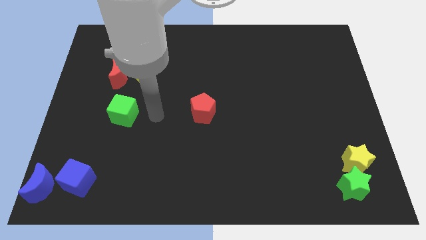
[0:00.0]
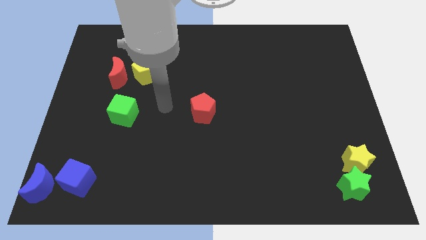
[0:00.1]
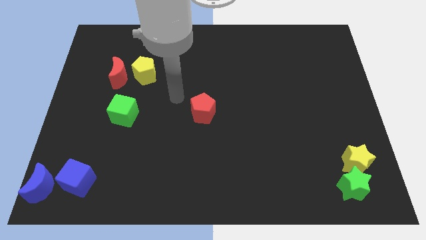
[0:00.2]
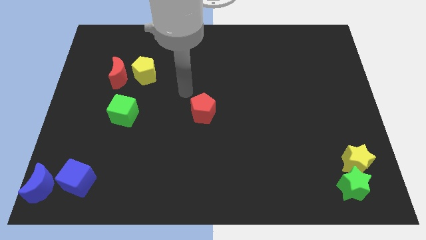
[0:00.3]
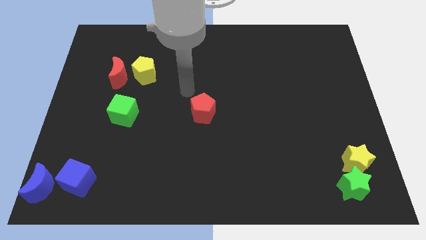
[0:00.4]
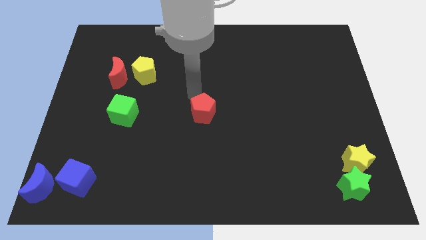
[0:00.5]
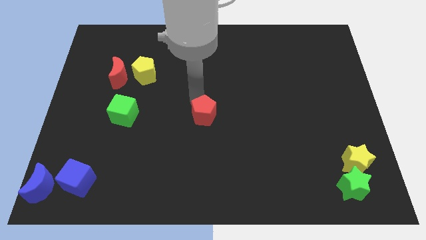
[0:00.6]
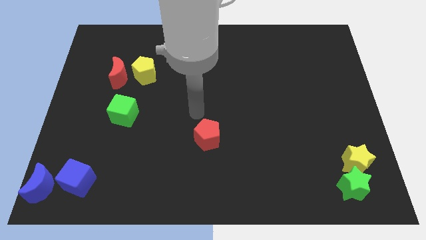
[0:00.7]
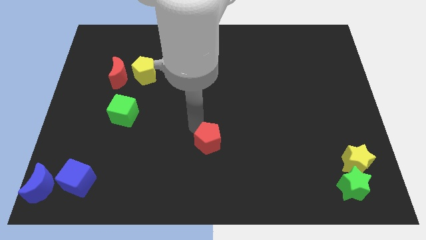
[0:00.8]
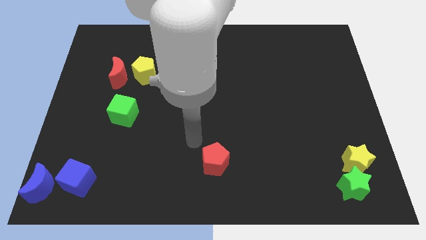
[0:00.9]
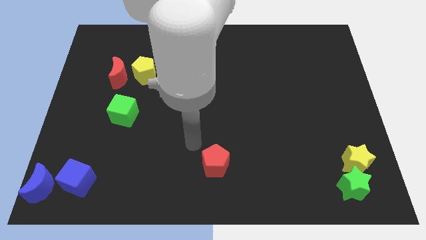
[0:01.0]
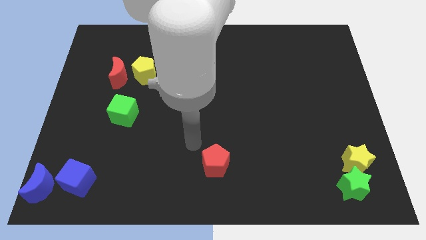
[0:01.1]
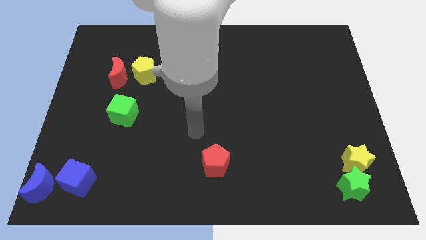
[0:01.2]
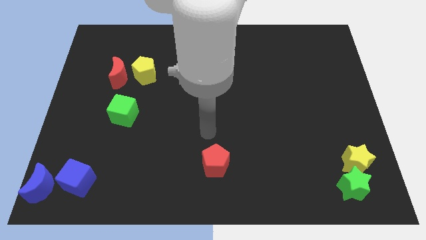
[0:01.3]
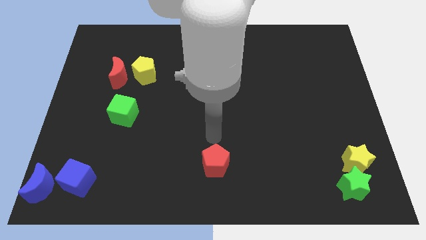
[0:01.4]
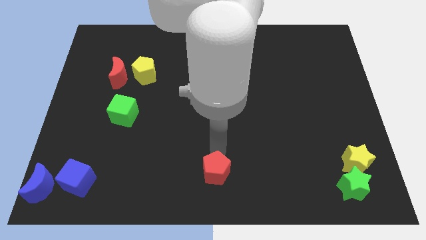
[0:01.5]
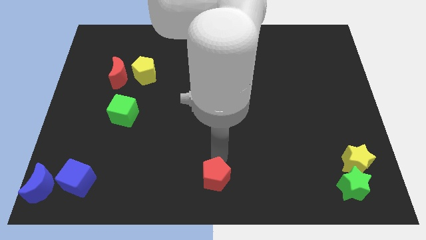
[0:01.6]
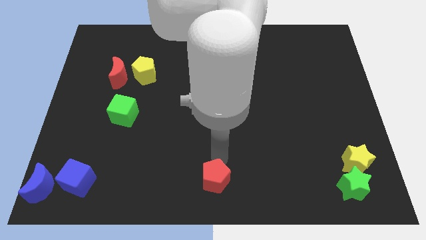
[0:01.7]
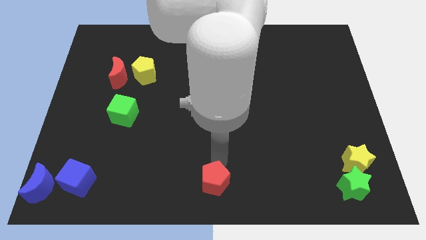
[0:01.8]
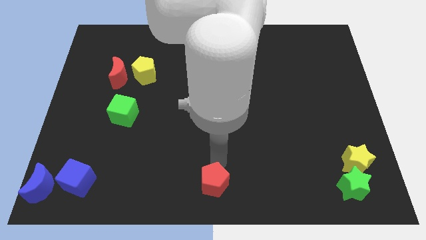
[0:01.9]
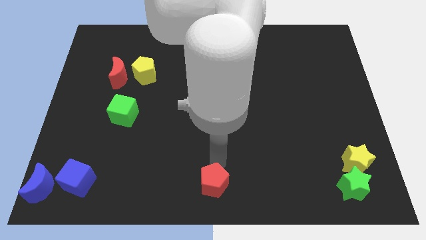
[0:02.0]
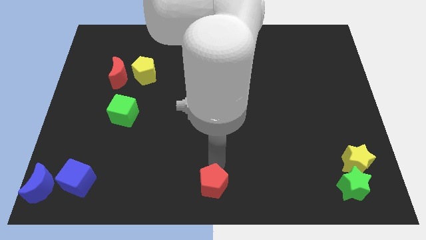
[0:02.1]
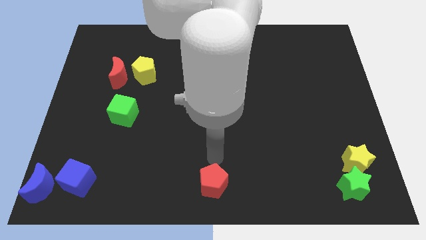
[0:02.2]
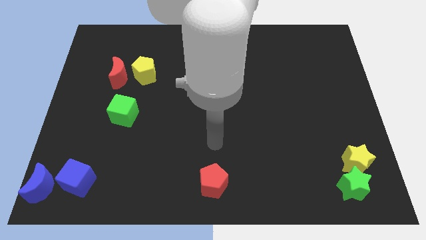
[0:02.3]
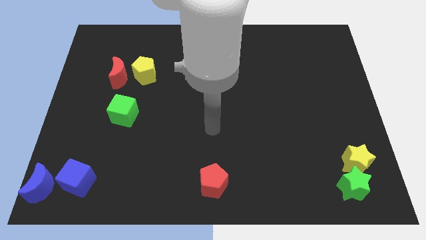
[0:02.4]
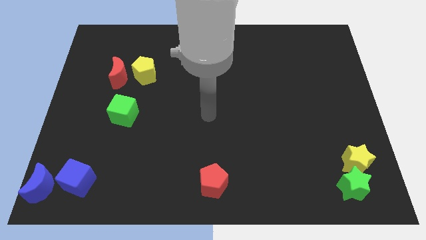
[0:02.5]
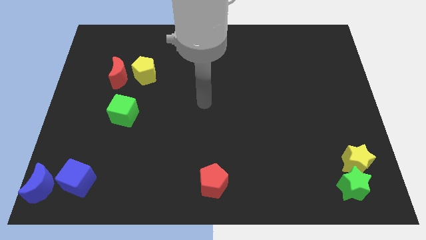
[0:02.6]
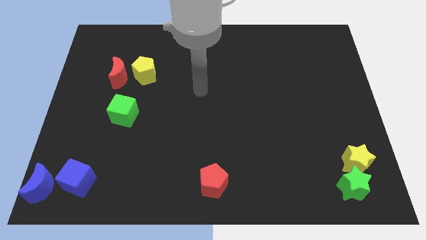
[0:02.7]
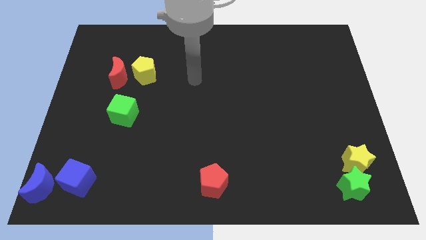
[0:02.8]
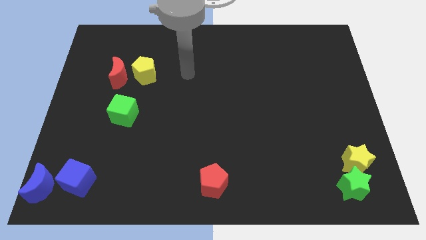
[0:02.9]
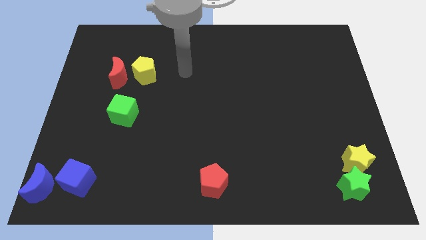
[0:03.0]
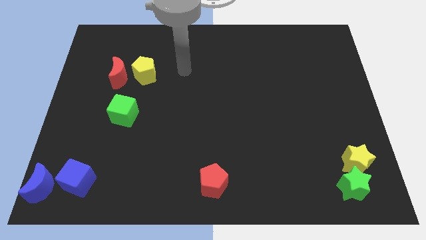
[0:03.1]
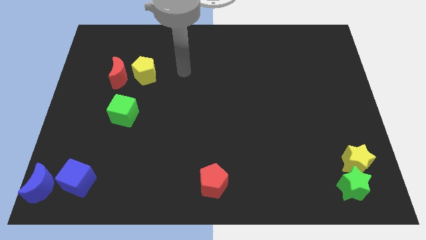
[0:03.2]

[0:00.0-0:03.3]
move the red pentagon downwards to the bottom middle center of the board

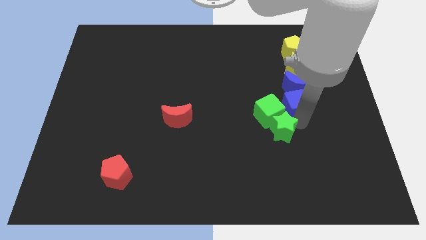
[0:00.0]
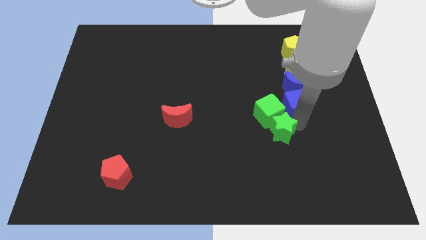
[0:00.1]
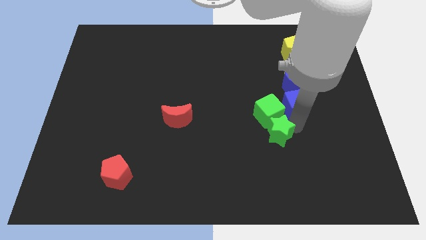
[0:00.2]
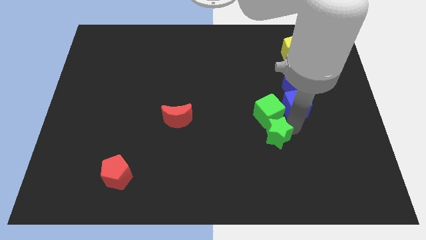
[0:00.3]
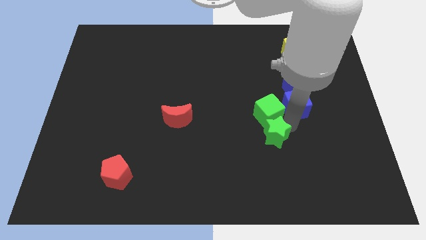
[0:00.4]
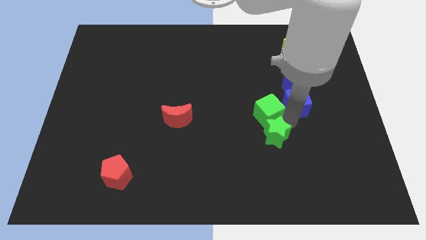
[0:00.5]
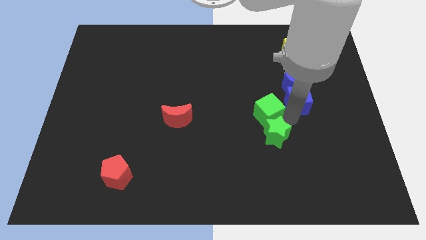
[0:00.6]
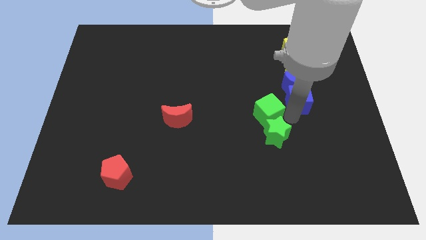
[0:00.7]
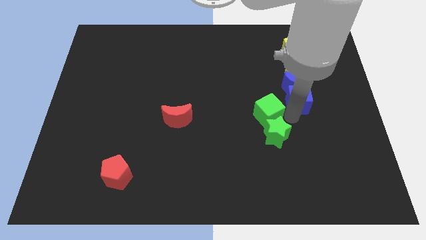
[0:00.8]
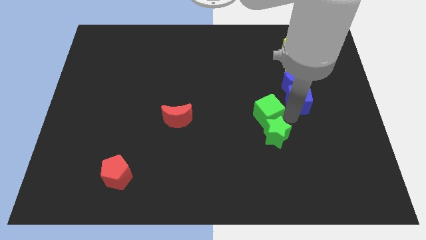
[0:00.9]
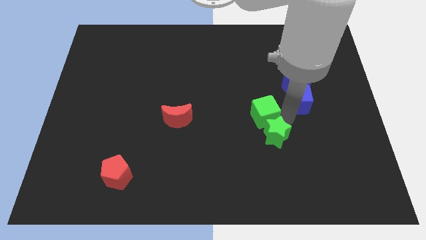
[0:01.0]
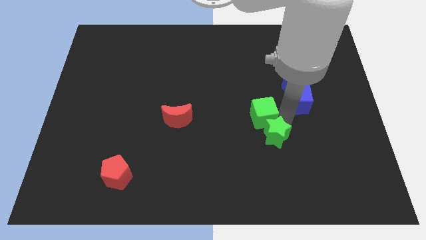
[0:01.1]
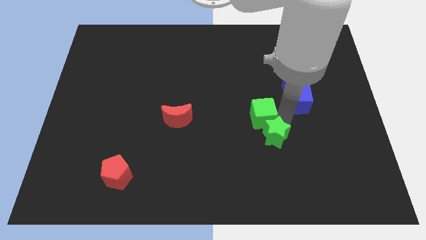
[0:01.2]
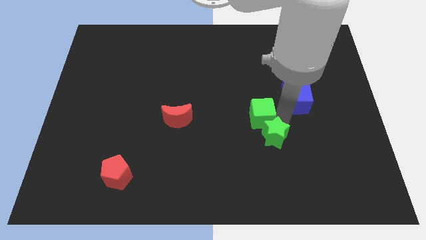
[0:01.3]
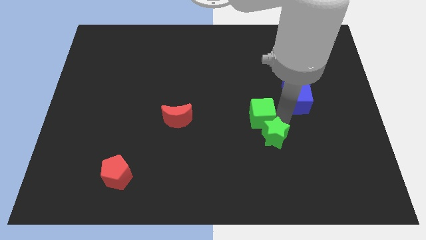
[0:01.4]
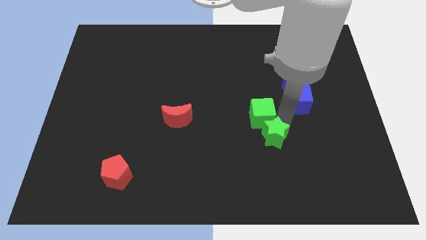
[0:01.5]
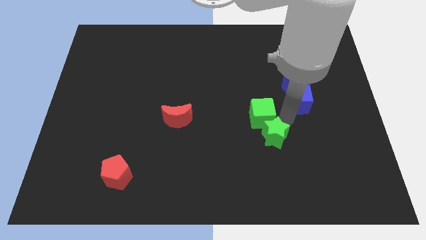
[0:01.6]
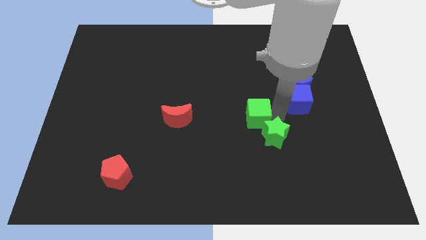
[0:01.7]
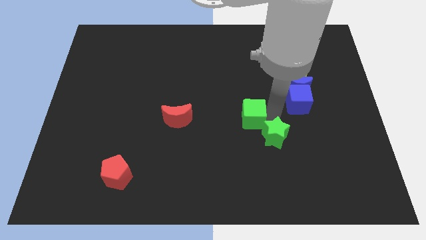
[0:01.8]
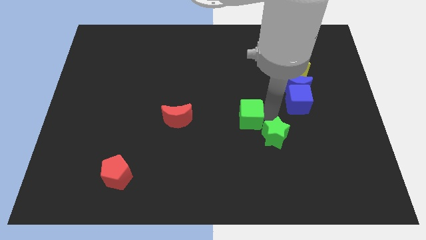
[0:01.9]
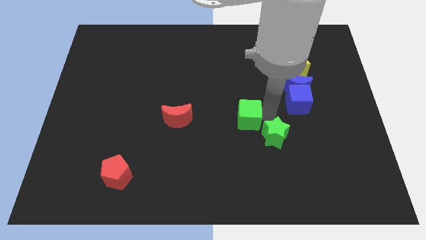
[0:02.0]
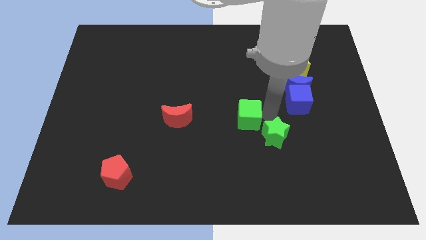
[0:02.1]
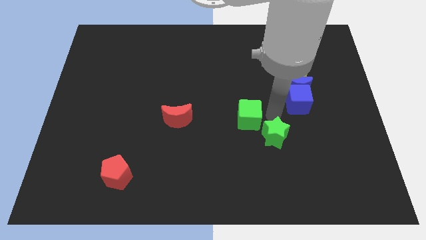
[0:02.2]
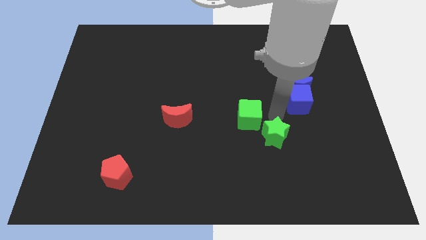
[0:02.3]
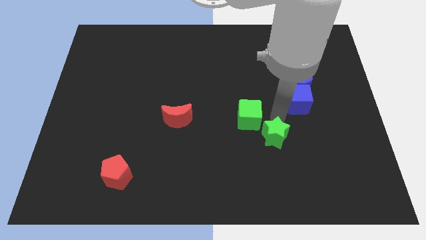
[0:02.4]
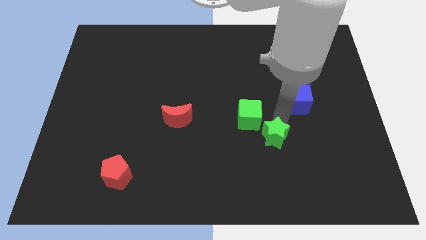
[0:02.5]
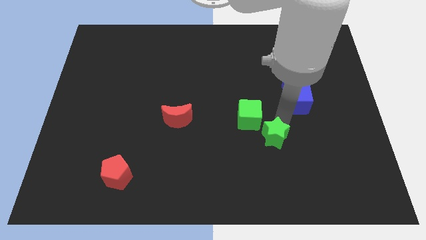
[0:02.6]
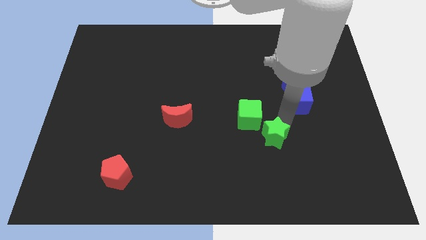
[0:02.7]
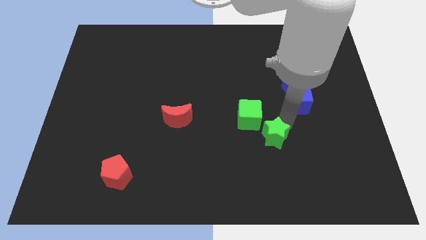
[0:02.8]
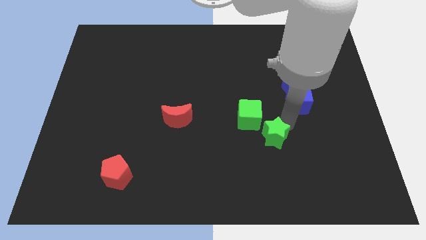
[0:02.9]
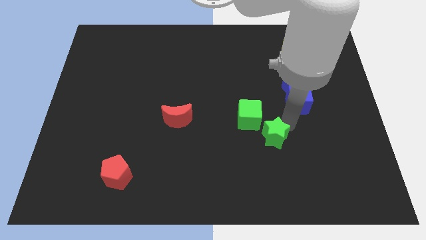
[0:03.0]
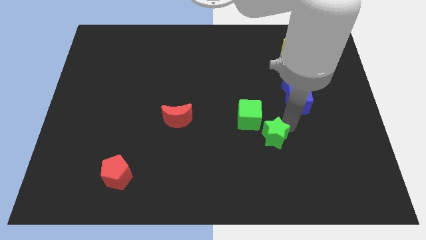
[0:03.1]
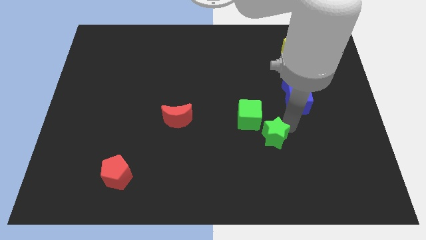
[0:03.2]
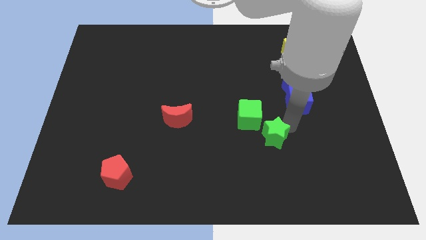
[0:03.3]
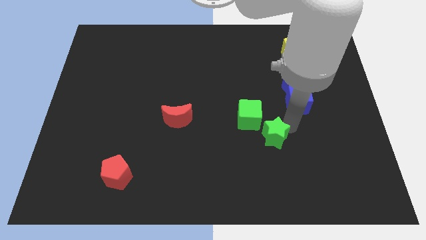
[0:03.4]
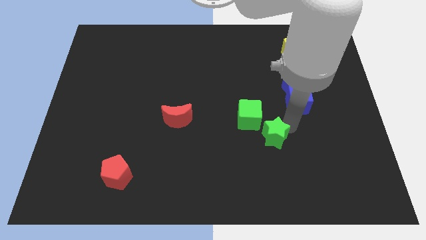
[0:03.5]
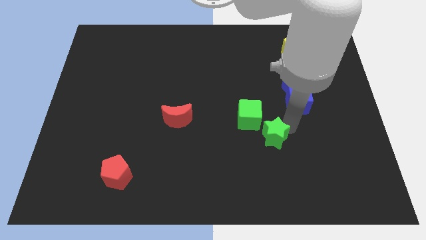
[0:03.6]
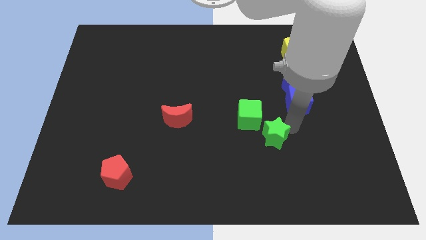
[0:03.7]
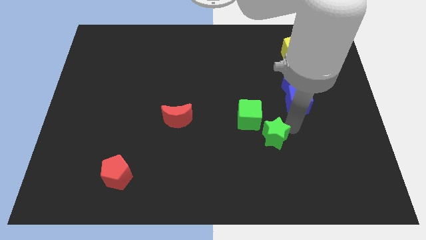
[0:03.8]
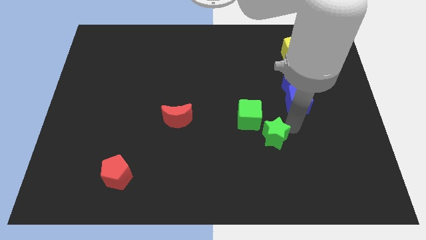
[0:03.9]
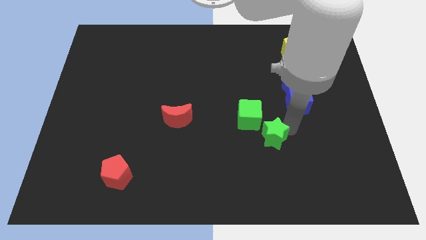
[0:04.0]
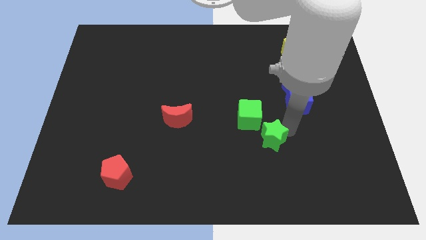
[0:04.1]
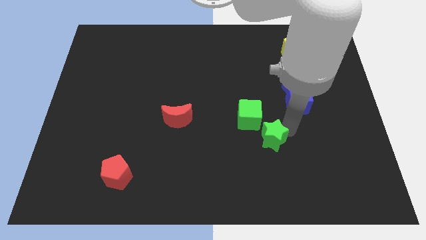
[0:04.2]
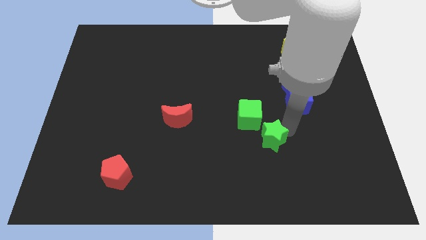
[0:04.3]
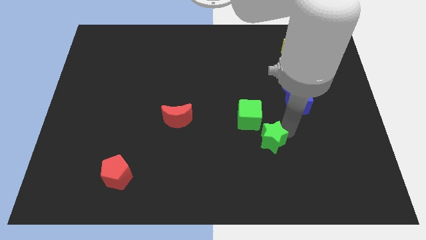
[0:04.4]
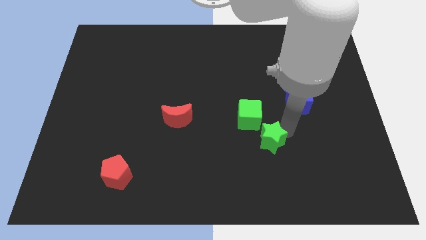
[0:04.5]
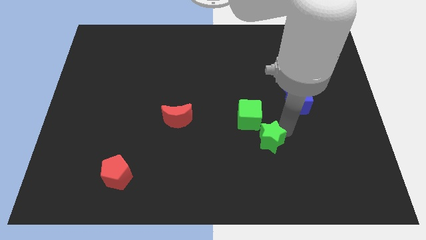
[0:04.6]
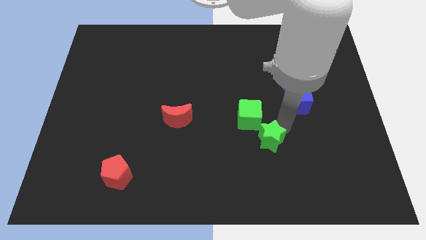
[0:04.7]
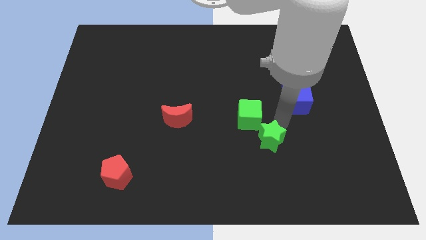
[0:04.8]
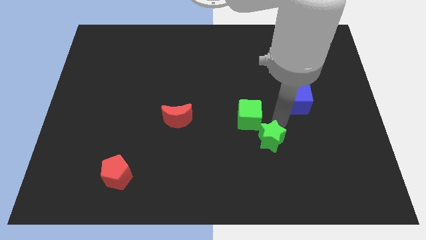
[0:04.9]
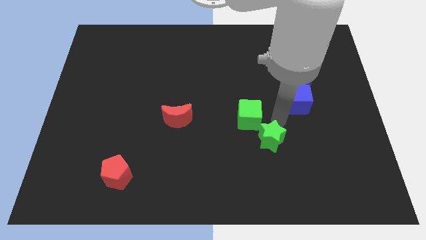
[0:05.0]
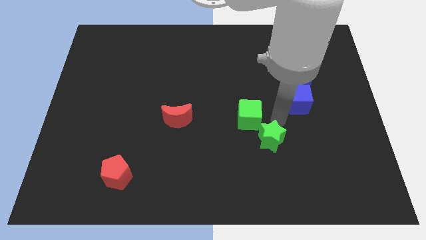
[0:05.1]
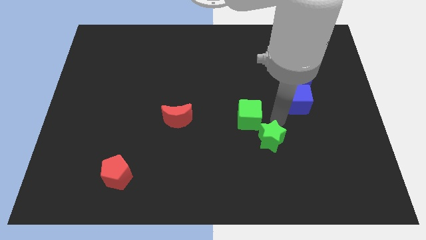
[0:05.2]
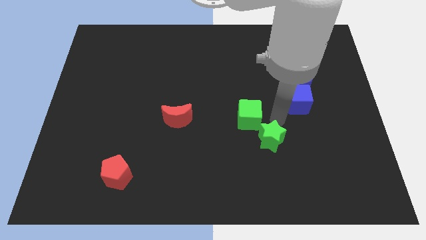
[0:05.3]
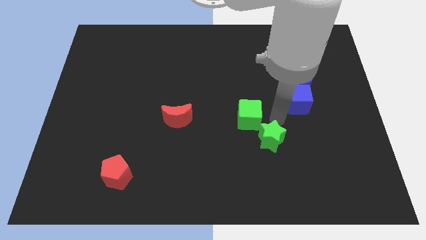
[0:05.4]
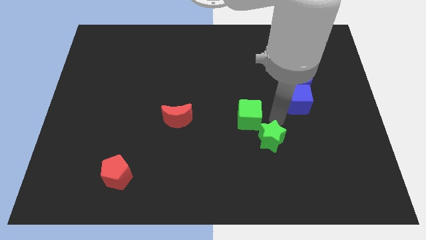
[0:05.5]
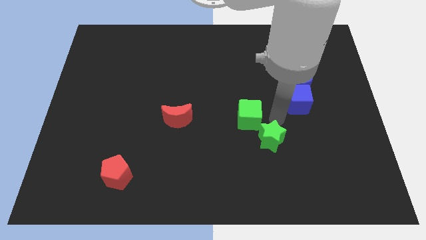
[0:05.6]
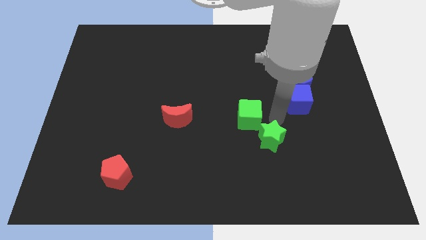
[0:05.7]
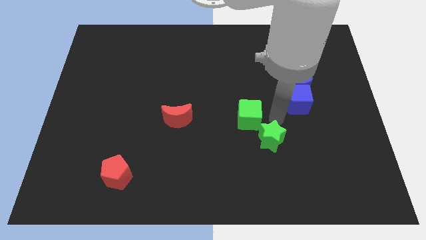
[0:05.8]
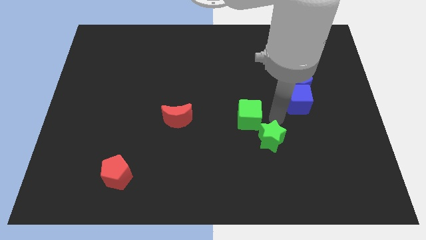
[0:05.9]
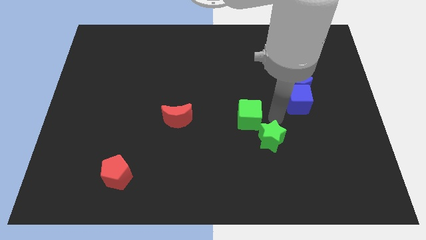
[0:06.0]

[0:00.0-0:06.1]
separate the green blocks from blue cube
